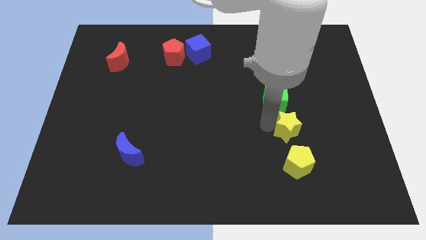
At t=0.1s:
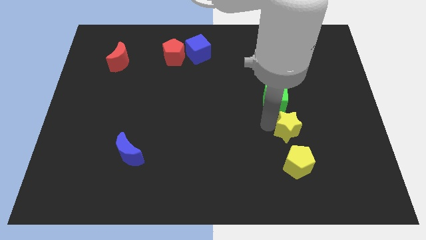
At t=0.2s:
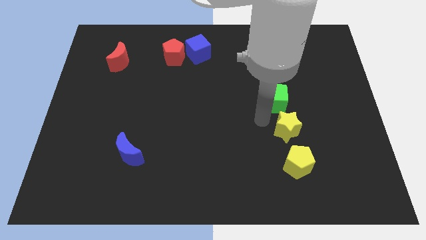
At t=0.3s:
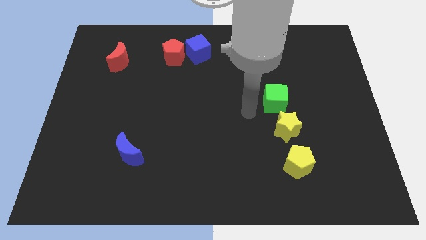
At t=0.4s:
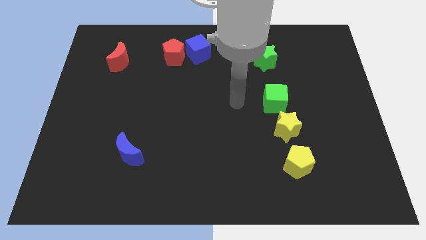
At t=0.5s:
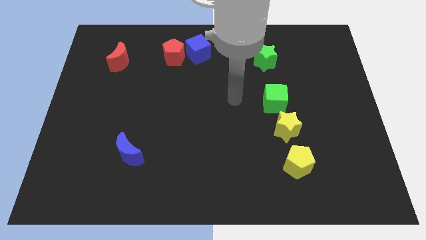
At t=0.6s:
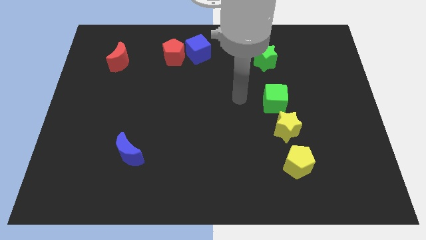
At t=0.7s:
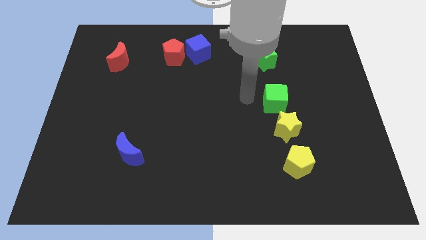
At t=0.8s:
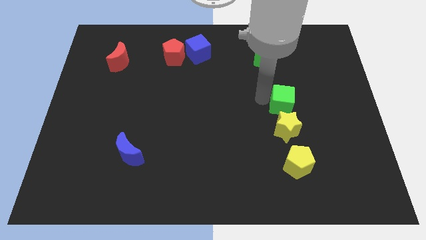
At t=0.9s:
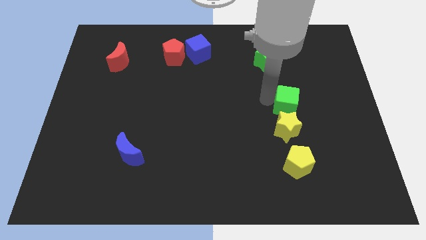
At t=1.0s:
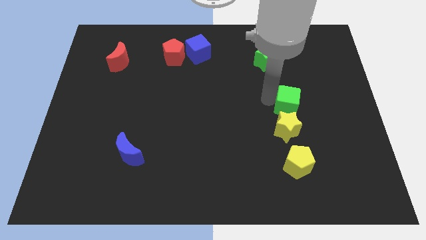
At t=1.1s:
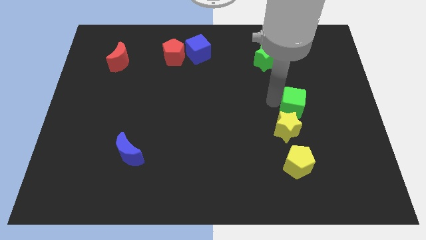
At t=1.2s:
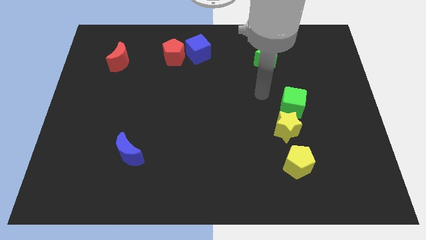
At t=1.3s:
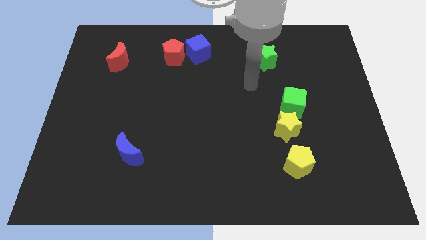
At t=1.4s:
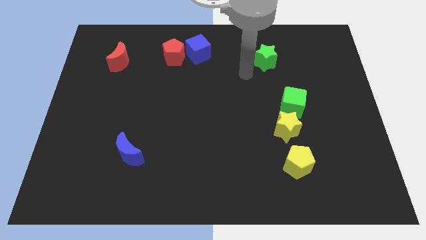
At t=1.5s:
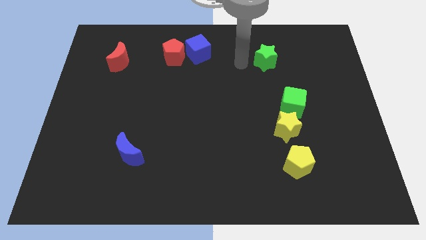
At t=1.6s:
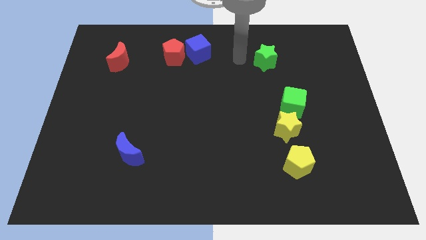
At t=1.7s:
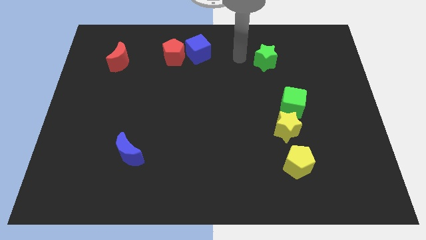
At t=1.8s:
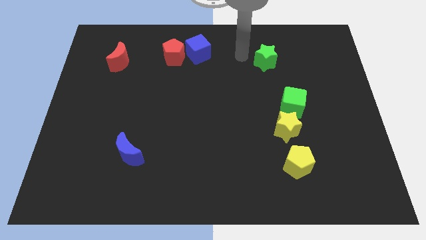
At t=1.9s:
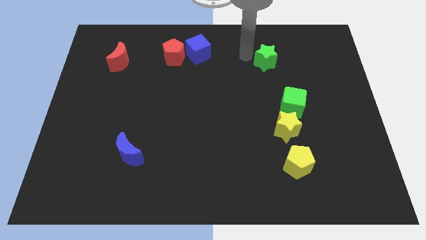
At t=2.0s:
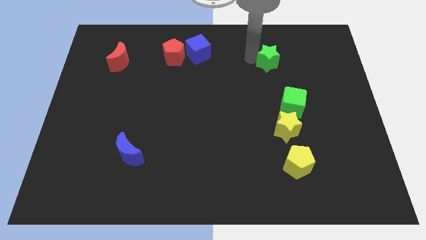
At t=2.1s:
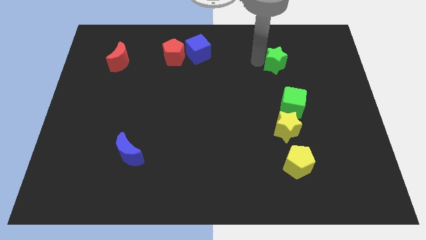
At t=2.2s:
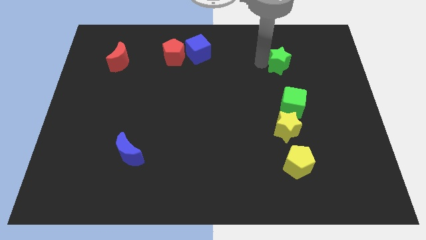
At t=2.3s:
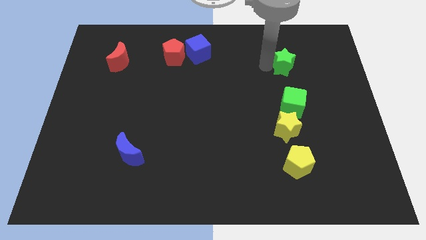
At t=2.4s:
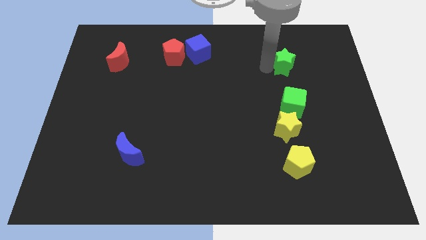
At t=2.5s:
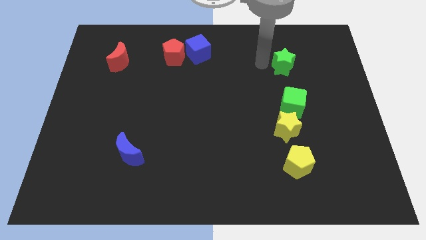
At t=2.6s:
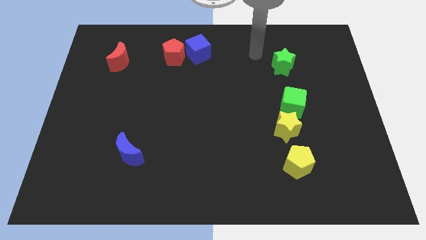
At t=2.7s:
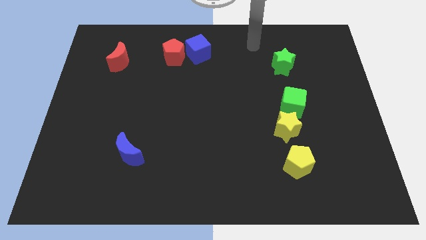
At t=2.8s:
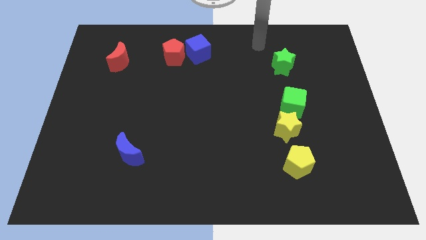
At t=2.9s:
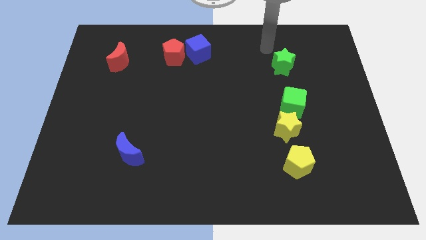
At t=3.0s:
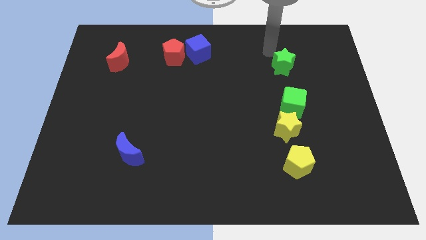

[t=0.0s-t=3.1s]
push the green blocks slightly towards the right side

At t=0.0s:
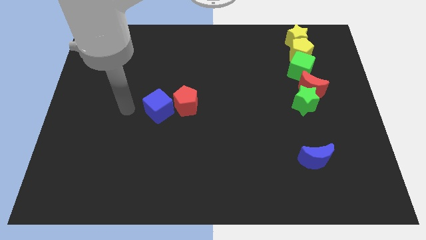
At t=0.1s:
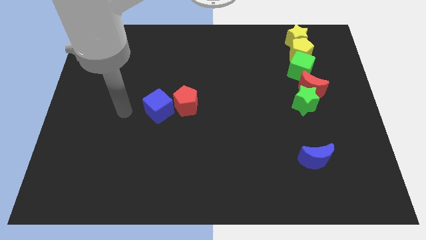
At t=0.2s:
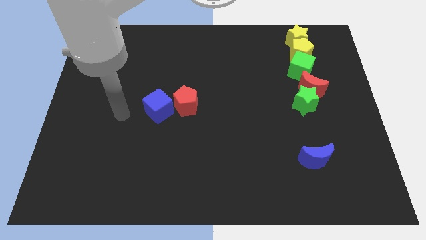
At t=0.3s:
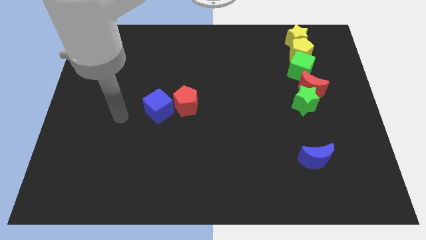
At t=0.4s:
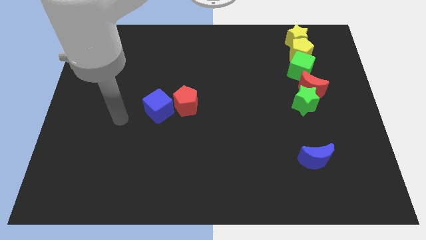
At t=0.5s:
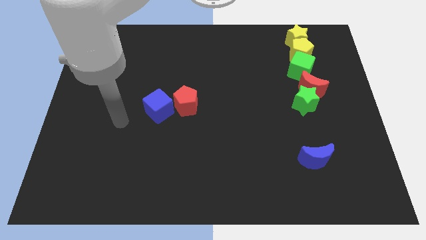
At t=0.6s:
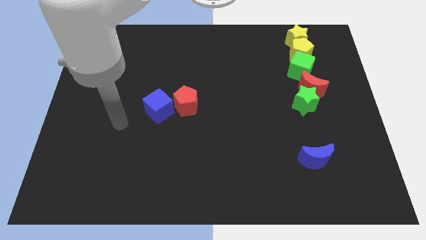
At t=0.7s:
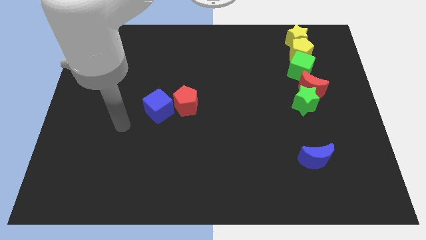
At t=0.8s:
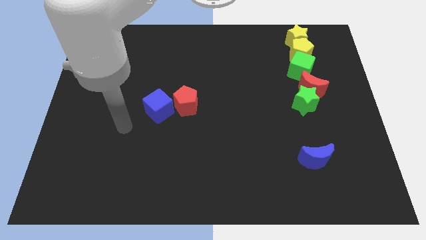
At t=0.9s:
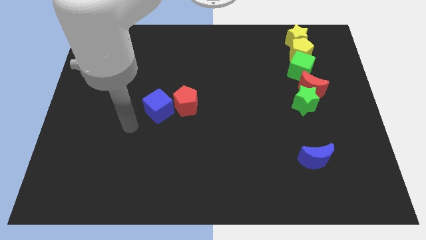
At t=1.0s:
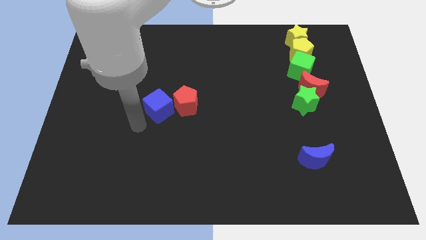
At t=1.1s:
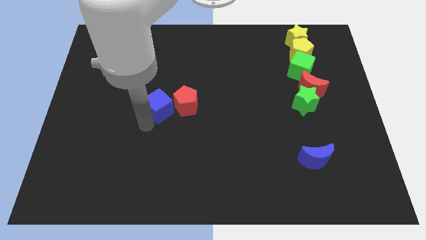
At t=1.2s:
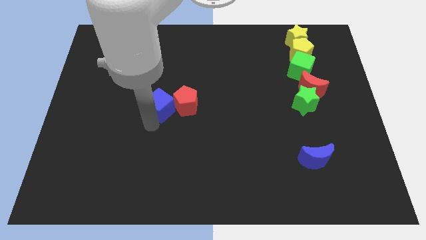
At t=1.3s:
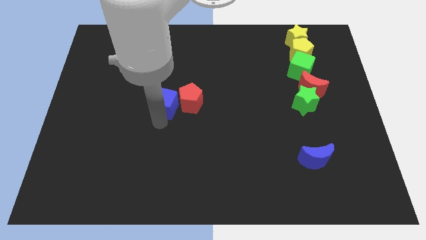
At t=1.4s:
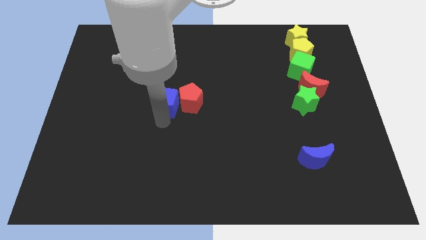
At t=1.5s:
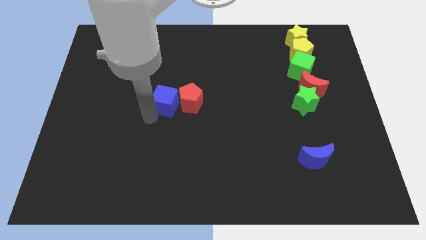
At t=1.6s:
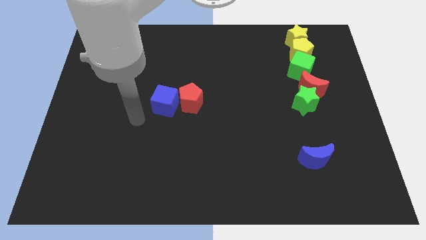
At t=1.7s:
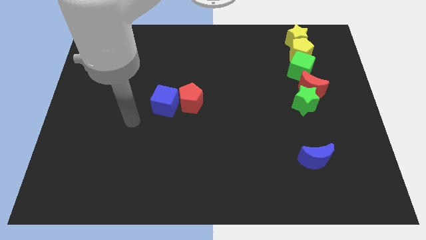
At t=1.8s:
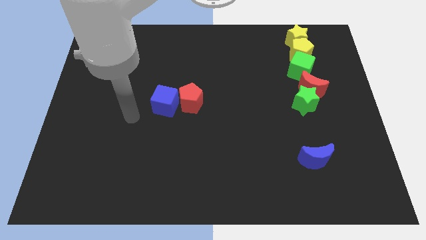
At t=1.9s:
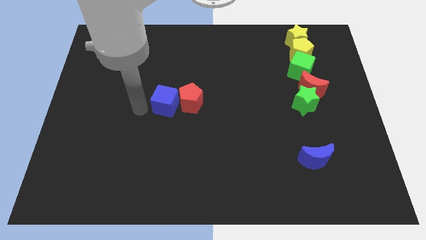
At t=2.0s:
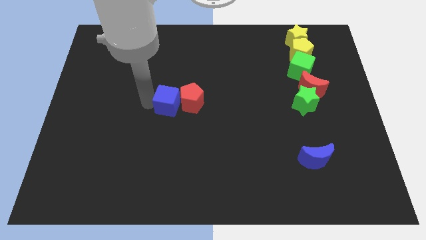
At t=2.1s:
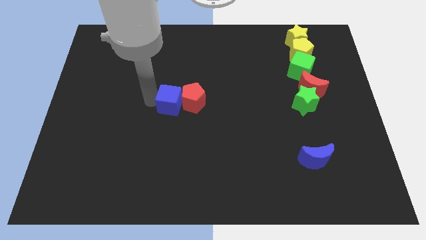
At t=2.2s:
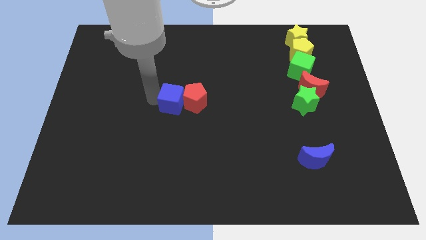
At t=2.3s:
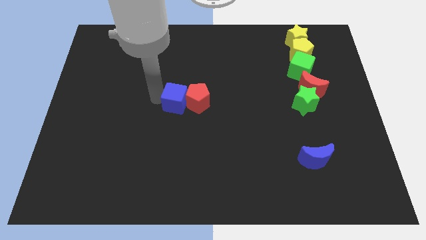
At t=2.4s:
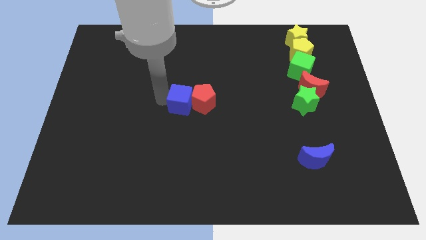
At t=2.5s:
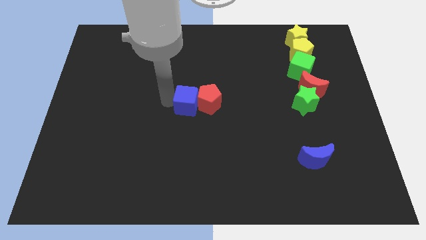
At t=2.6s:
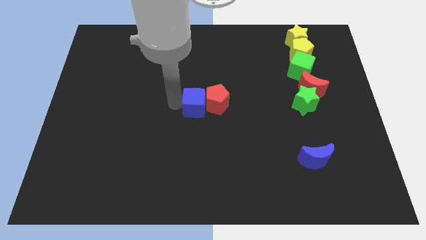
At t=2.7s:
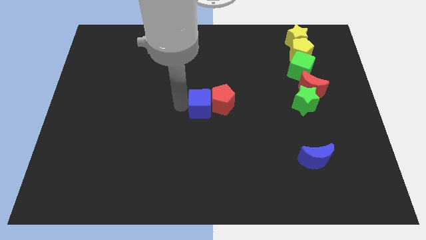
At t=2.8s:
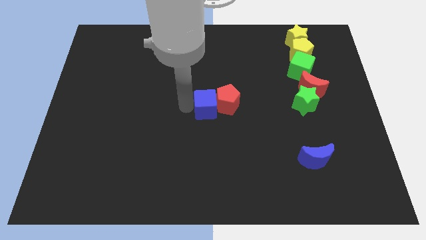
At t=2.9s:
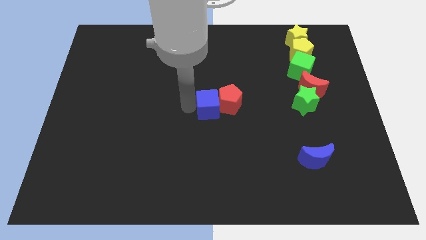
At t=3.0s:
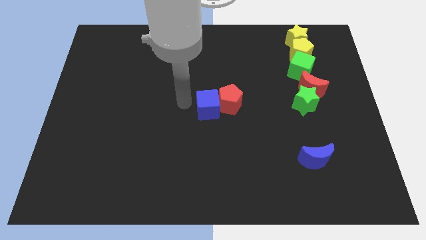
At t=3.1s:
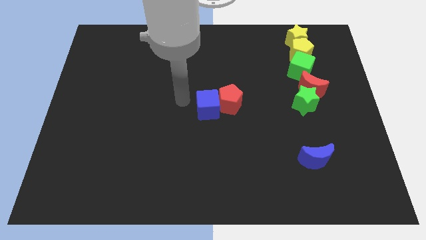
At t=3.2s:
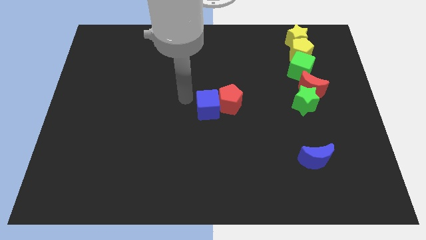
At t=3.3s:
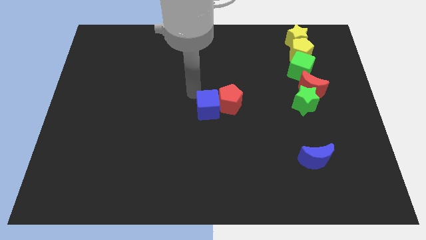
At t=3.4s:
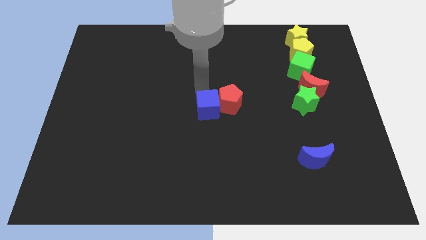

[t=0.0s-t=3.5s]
slide blue cube and the red pentagon towards the center

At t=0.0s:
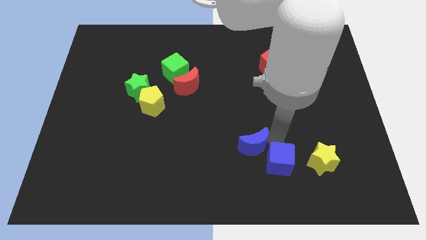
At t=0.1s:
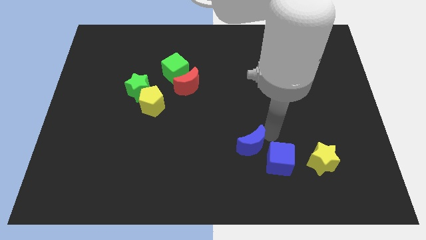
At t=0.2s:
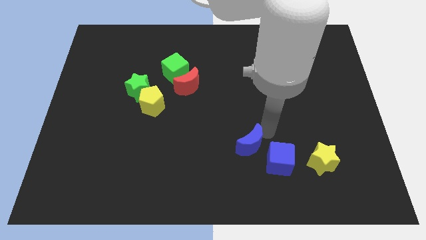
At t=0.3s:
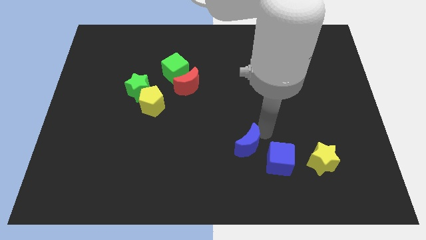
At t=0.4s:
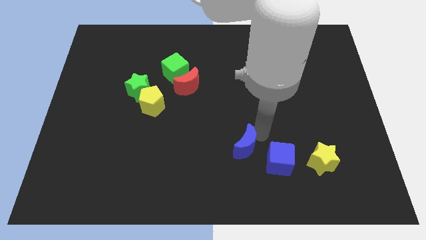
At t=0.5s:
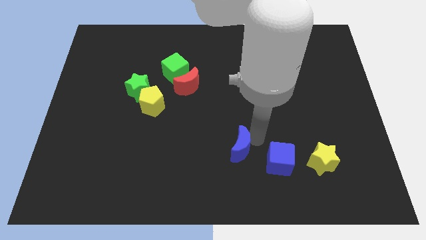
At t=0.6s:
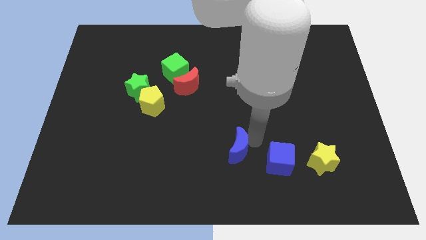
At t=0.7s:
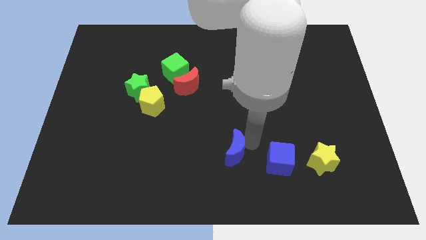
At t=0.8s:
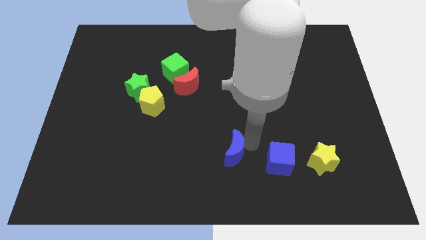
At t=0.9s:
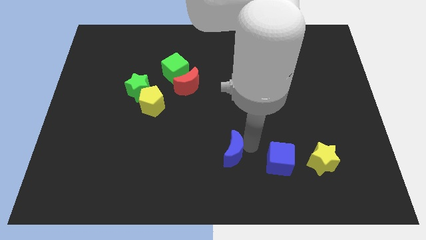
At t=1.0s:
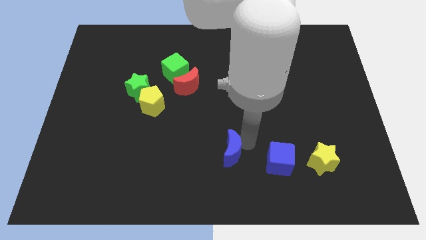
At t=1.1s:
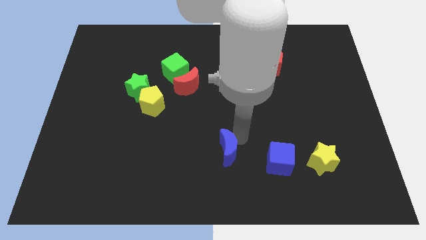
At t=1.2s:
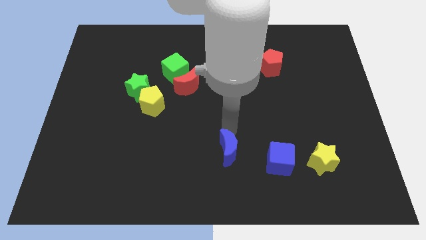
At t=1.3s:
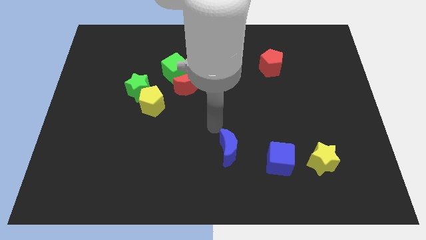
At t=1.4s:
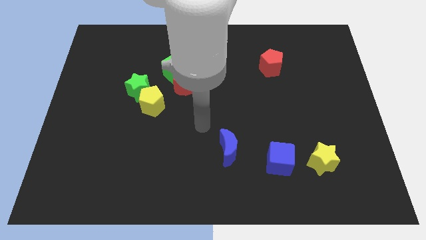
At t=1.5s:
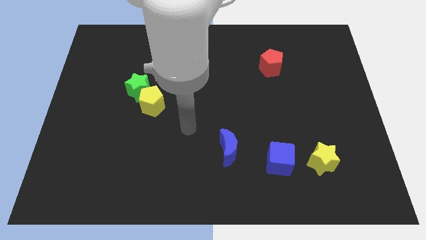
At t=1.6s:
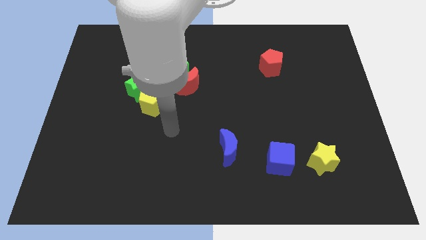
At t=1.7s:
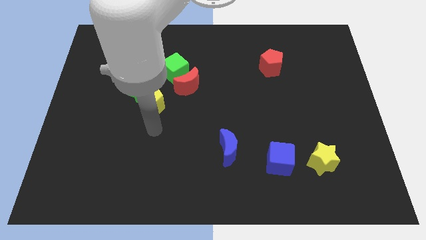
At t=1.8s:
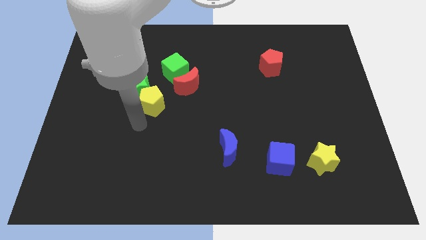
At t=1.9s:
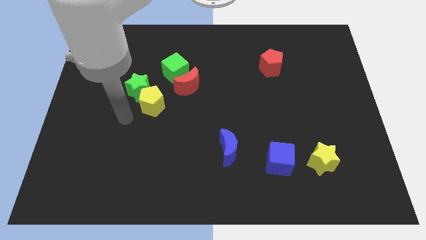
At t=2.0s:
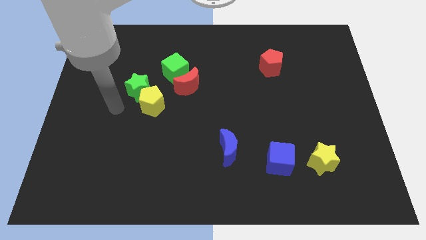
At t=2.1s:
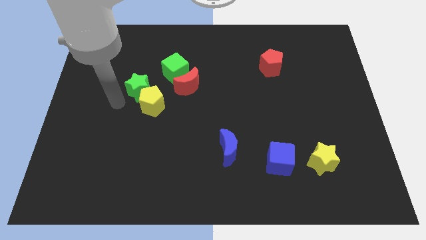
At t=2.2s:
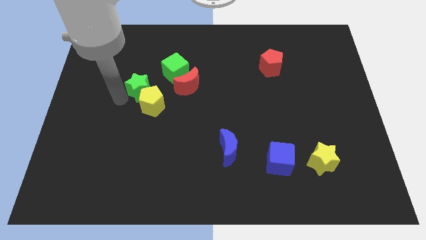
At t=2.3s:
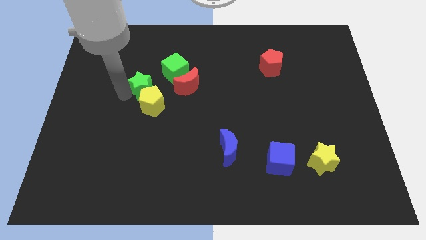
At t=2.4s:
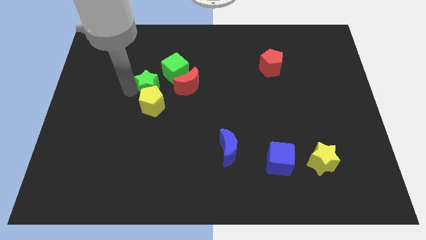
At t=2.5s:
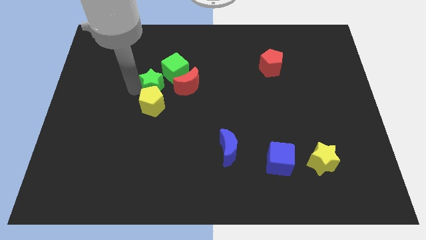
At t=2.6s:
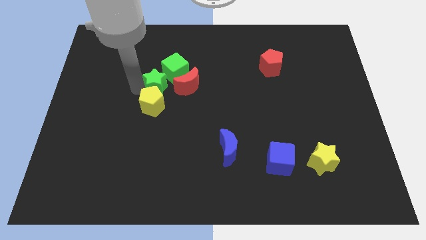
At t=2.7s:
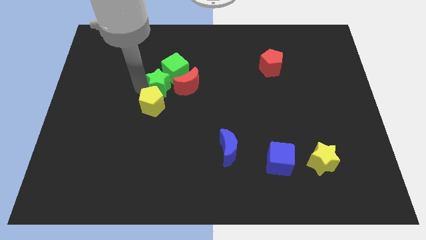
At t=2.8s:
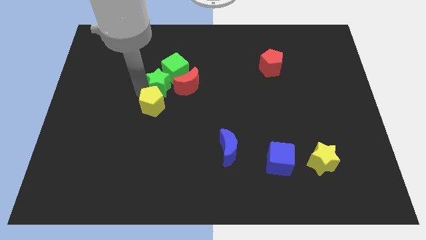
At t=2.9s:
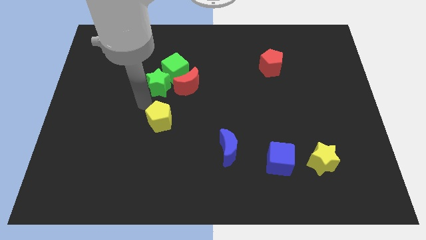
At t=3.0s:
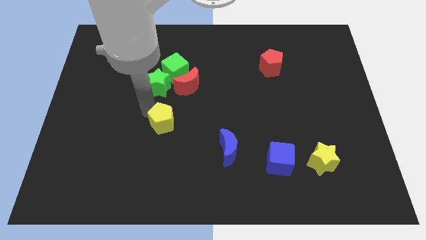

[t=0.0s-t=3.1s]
separate the blue cube and blue moon
